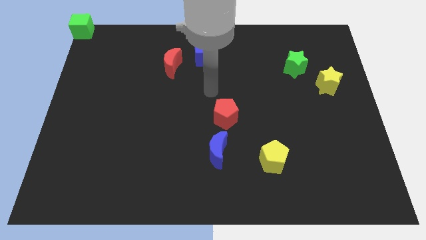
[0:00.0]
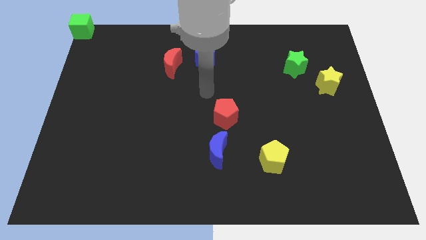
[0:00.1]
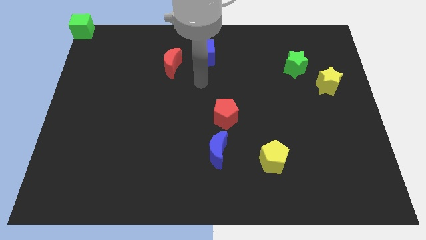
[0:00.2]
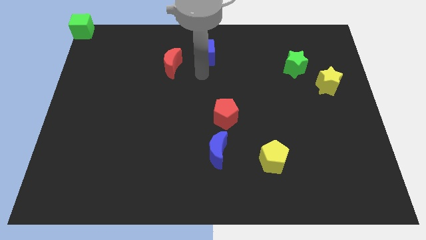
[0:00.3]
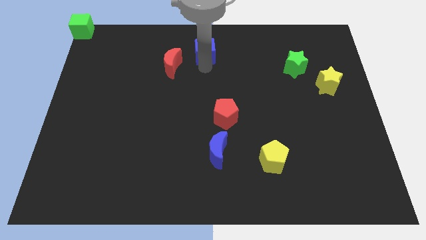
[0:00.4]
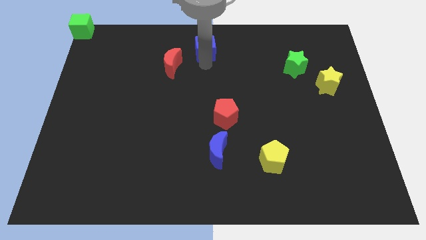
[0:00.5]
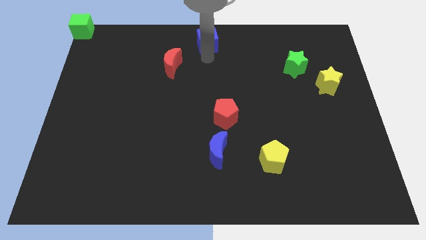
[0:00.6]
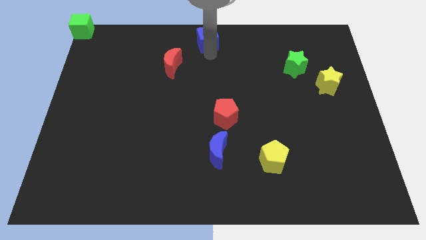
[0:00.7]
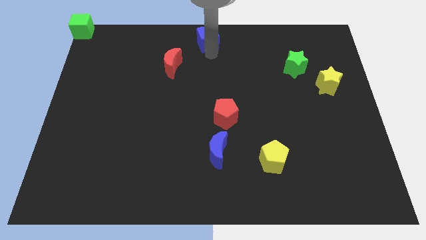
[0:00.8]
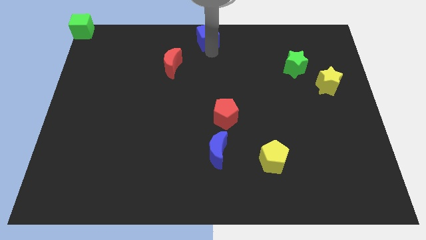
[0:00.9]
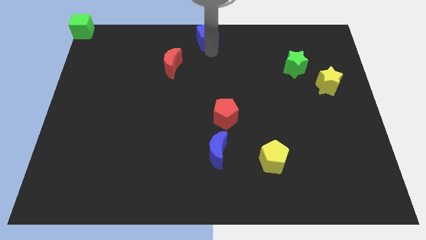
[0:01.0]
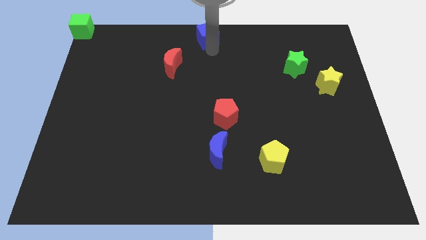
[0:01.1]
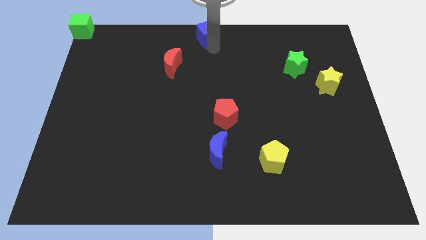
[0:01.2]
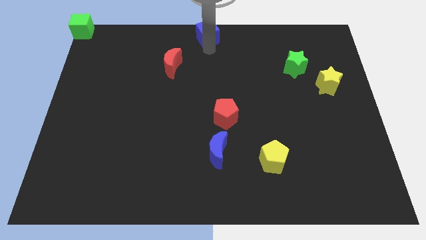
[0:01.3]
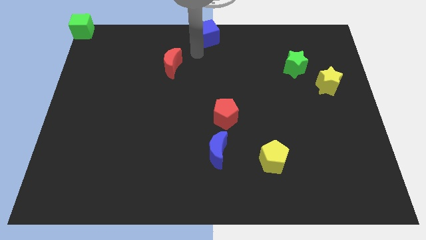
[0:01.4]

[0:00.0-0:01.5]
move the blue cube to the top center of the board

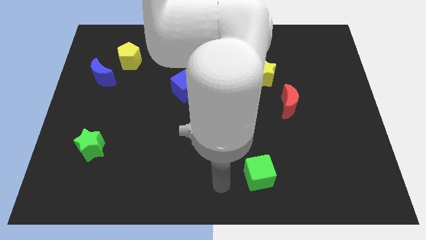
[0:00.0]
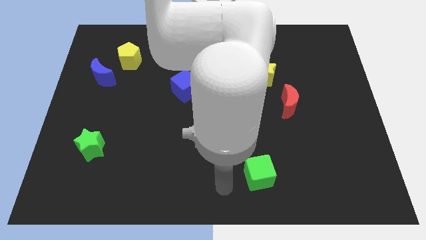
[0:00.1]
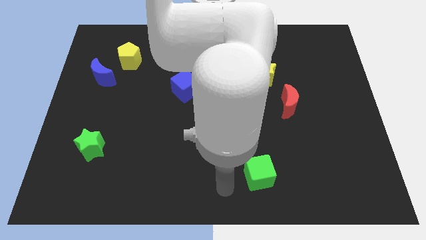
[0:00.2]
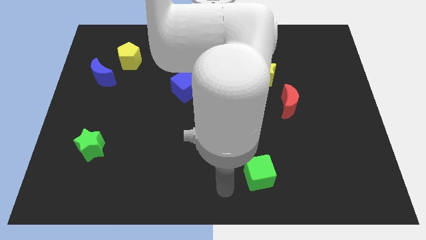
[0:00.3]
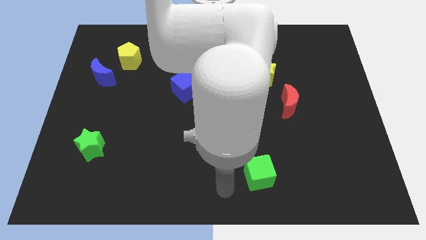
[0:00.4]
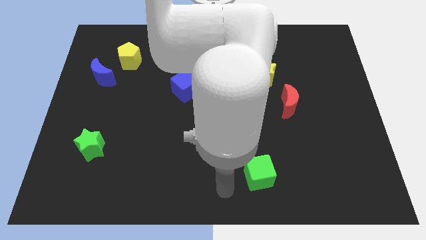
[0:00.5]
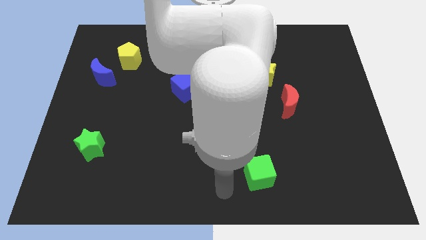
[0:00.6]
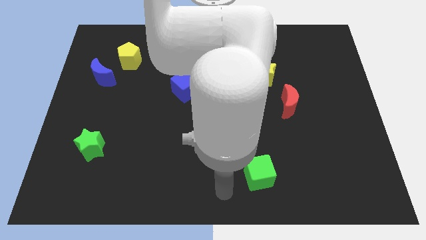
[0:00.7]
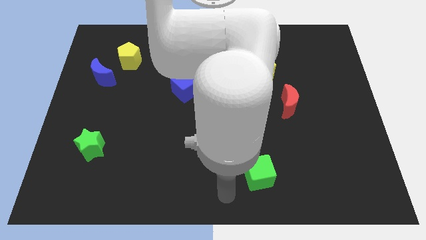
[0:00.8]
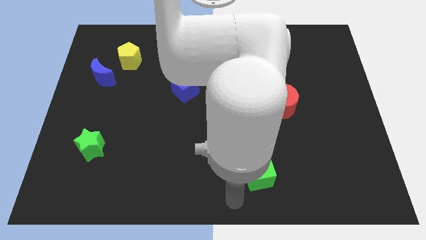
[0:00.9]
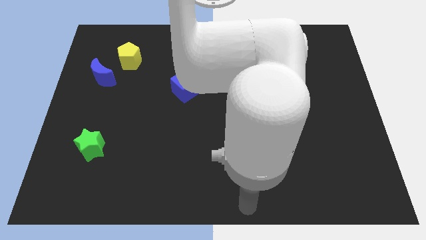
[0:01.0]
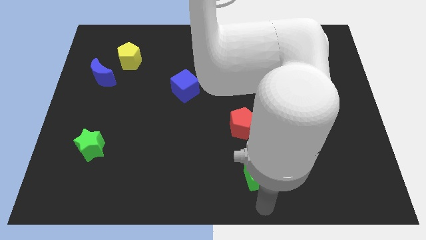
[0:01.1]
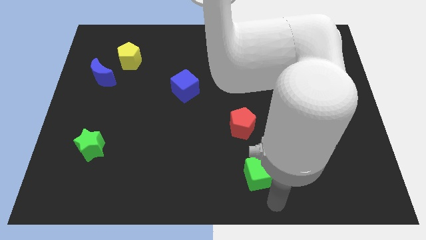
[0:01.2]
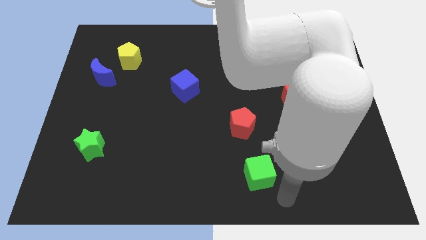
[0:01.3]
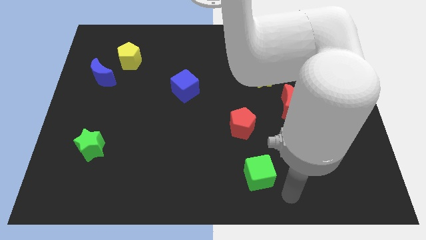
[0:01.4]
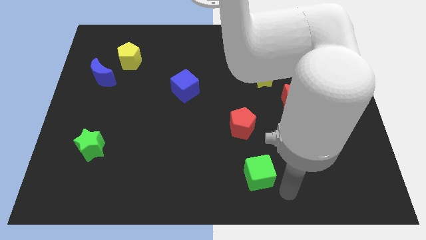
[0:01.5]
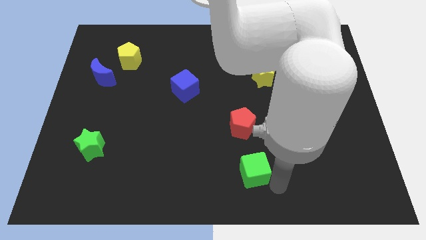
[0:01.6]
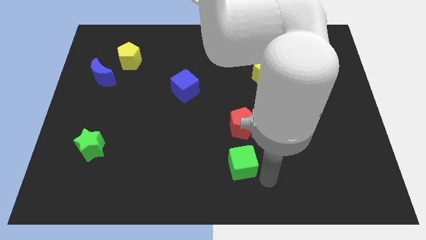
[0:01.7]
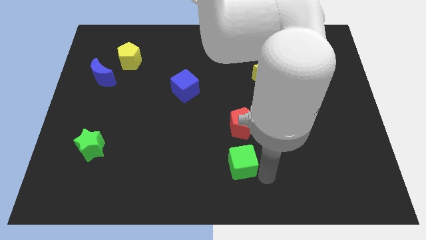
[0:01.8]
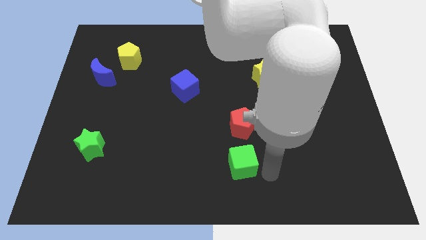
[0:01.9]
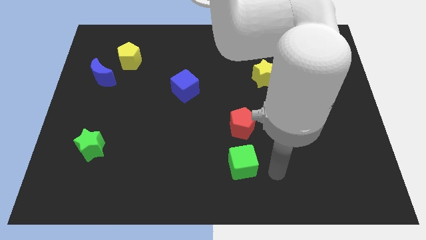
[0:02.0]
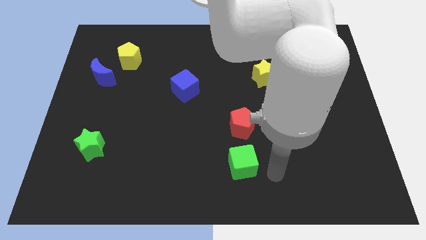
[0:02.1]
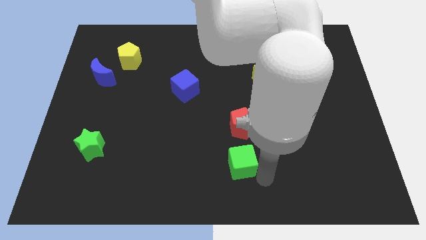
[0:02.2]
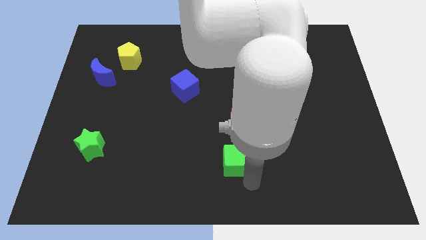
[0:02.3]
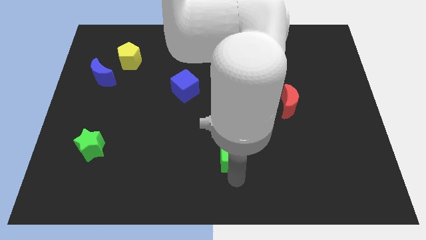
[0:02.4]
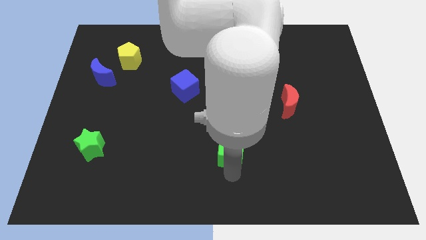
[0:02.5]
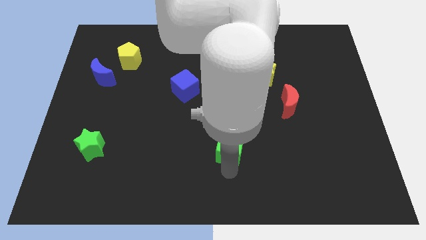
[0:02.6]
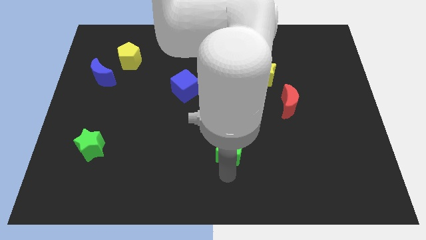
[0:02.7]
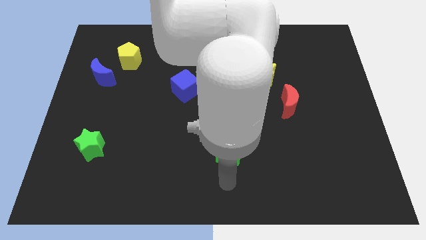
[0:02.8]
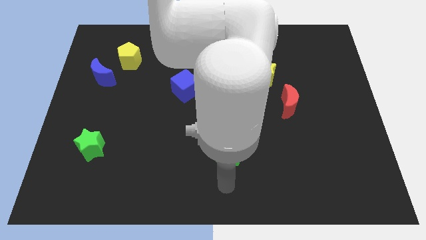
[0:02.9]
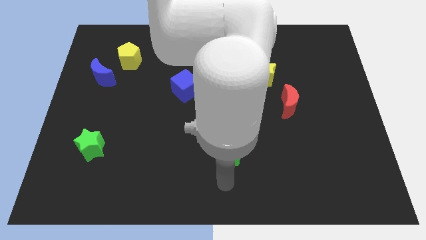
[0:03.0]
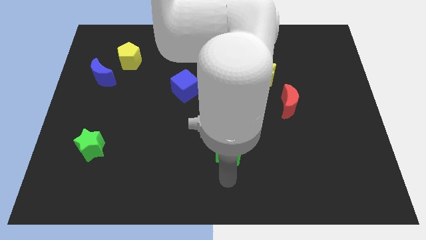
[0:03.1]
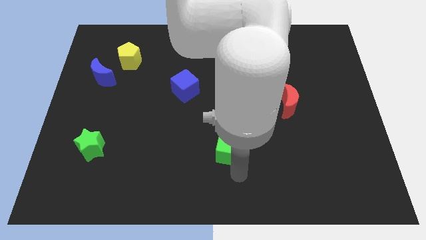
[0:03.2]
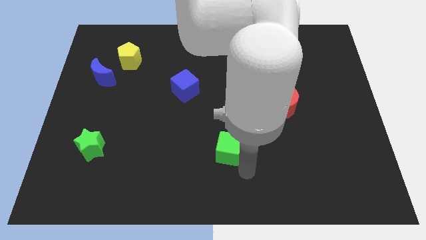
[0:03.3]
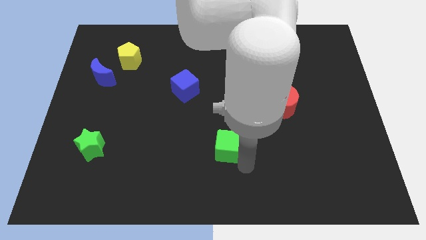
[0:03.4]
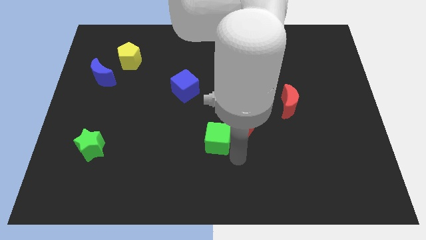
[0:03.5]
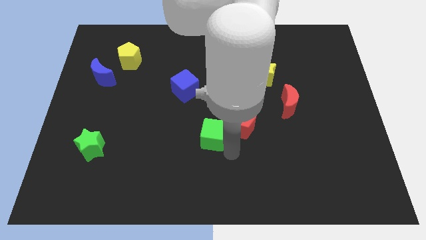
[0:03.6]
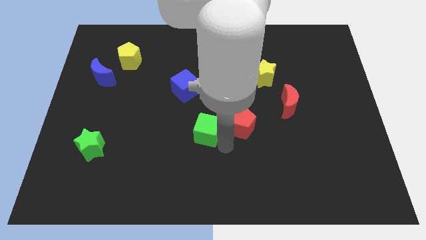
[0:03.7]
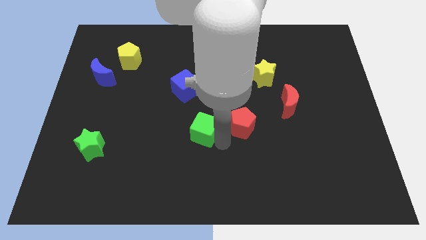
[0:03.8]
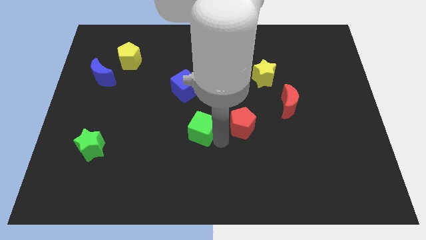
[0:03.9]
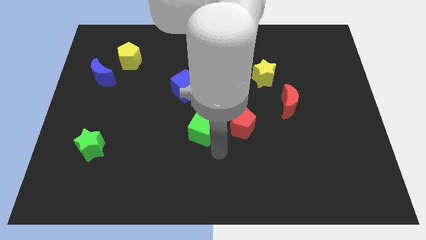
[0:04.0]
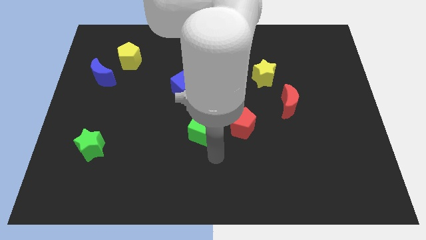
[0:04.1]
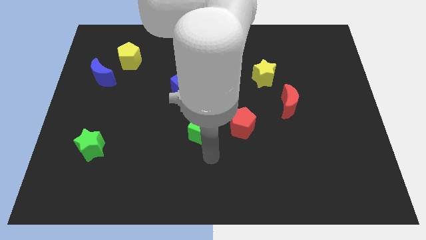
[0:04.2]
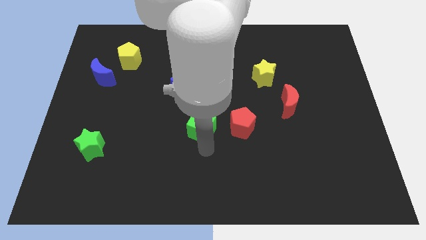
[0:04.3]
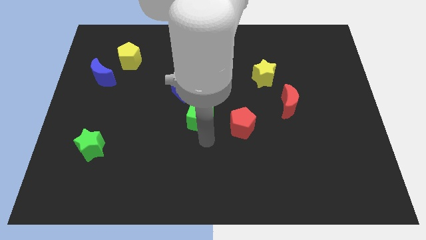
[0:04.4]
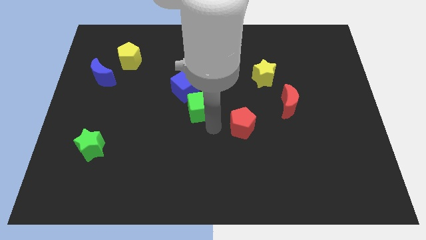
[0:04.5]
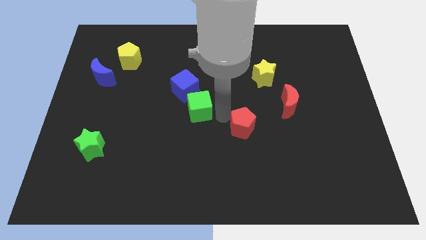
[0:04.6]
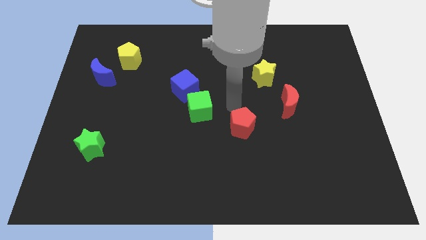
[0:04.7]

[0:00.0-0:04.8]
push the green cube towards the blue cube

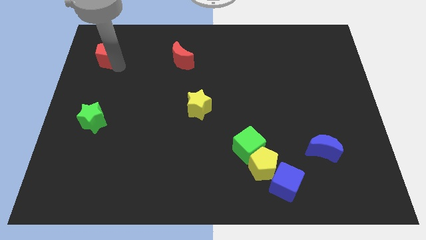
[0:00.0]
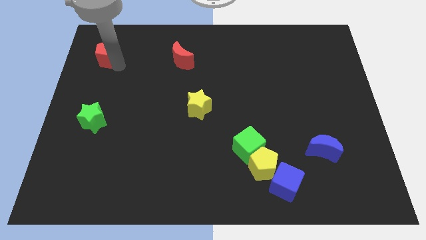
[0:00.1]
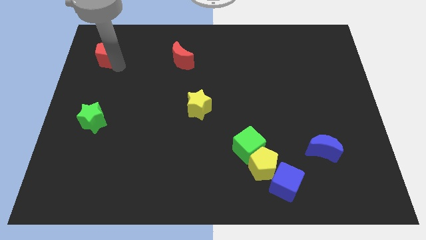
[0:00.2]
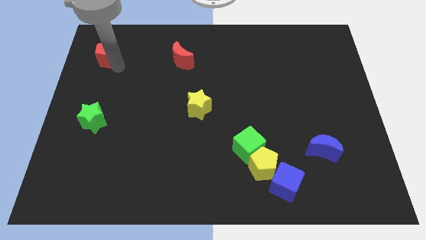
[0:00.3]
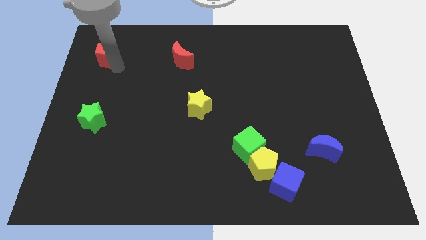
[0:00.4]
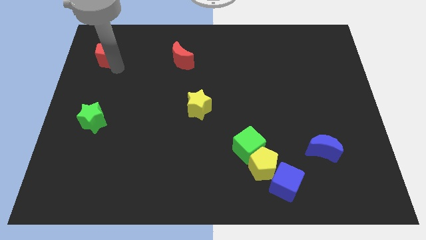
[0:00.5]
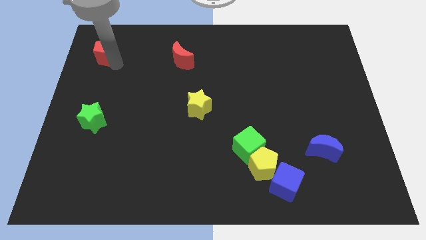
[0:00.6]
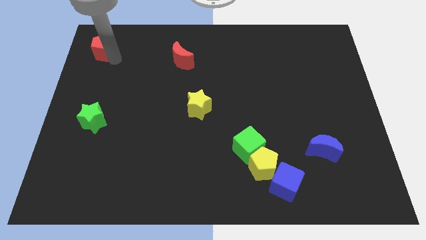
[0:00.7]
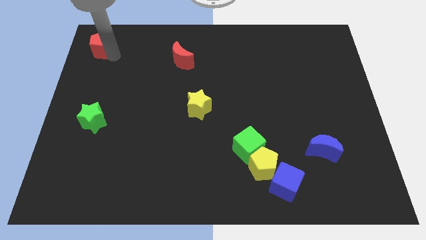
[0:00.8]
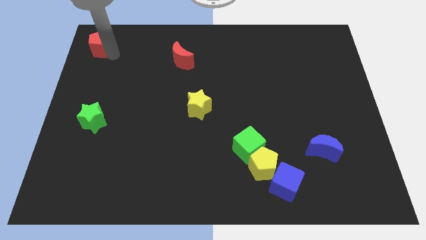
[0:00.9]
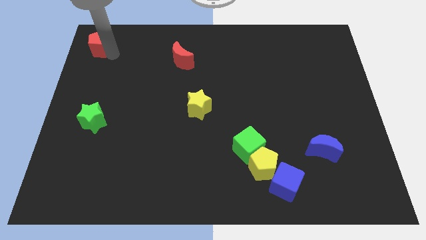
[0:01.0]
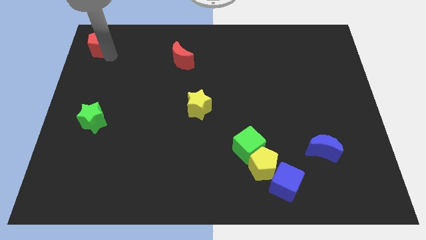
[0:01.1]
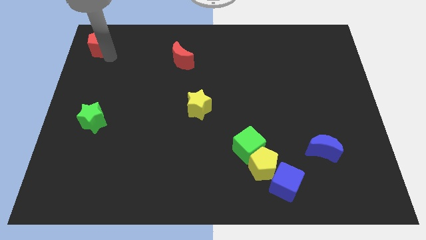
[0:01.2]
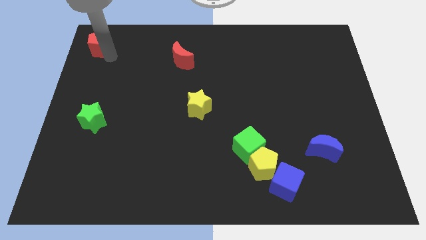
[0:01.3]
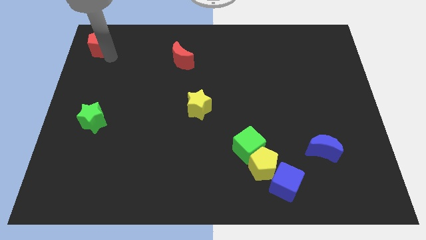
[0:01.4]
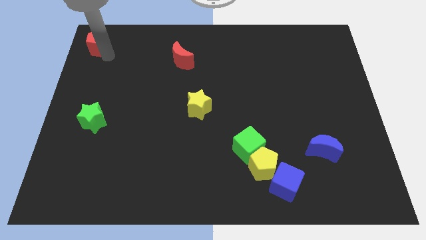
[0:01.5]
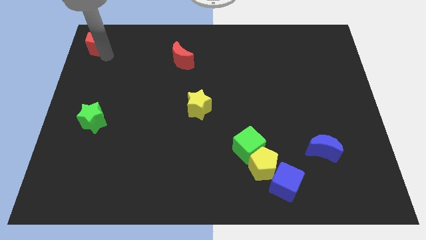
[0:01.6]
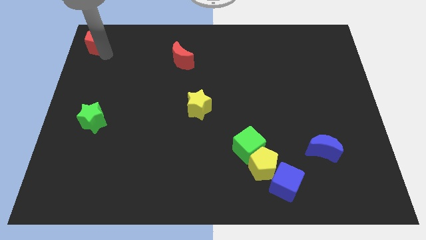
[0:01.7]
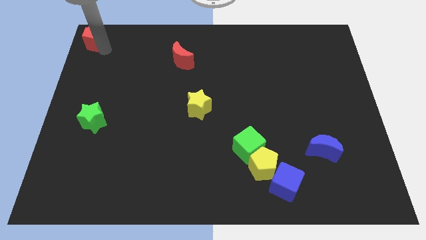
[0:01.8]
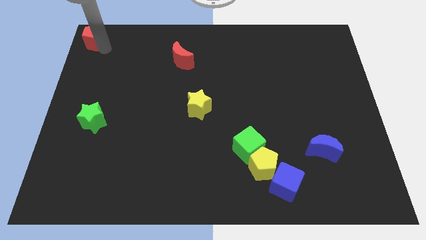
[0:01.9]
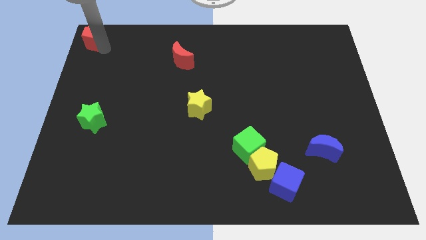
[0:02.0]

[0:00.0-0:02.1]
move red pentagon towards top left of the board

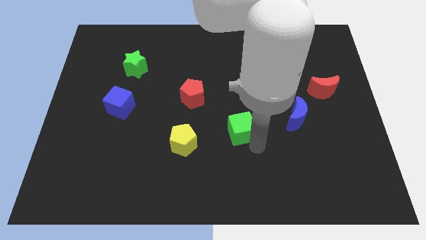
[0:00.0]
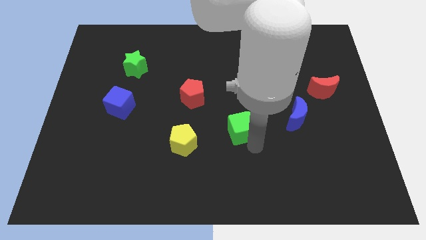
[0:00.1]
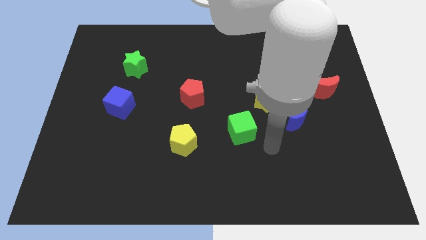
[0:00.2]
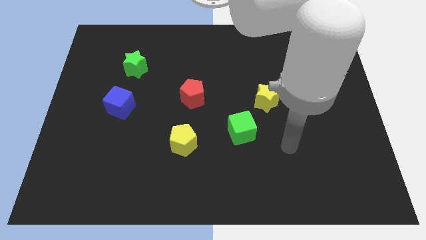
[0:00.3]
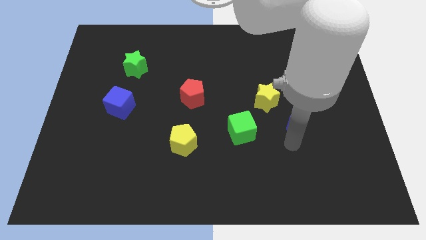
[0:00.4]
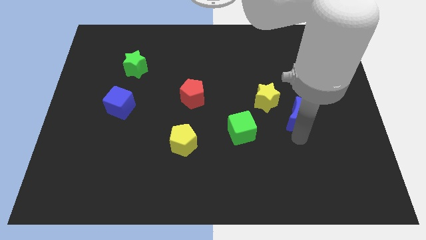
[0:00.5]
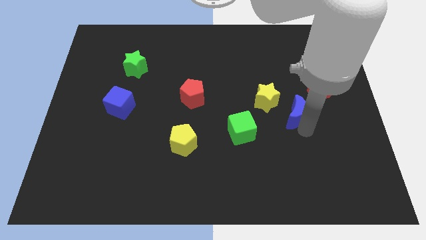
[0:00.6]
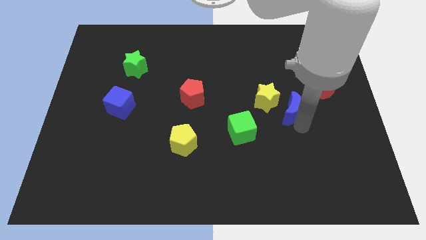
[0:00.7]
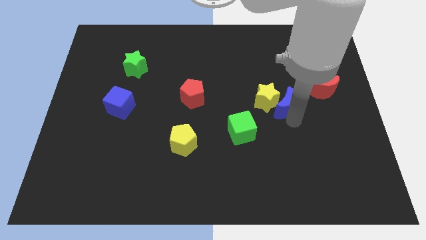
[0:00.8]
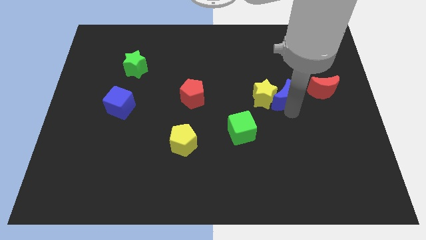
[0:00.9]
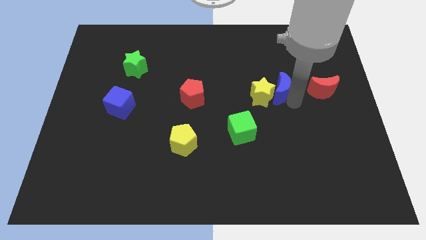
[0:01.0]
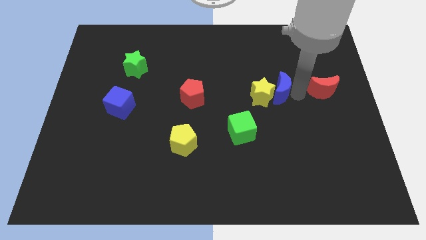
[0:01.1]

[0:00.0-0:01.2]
move blue moon to the right of yellow star
